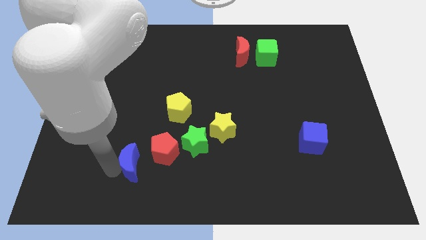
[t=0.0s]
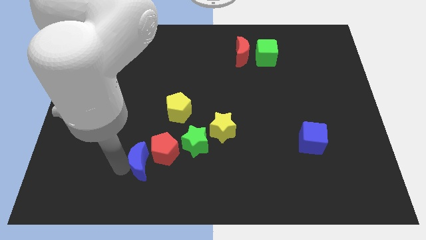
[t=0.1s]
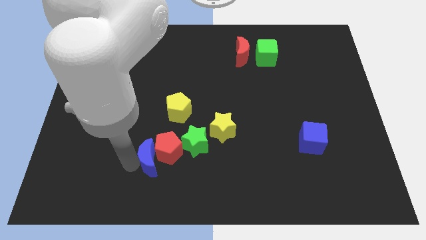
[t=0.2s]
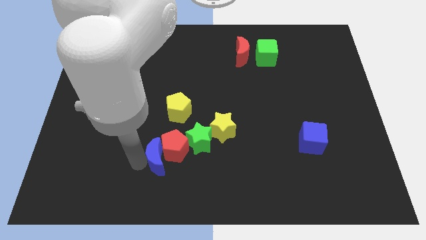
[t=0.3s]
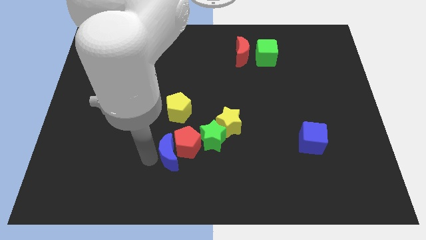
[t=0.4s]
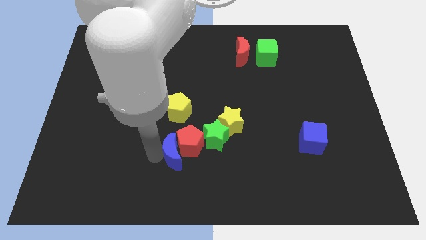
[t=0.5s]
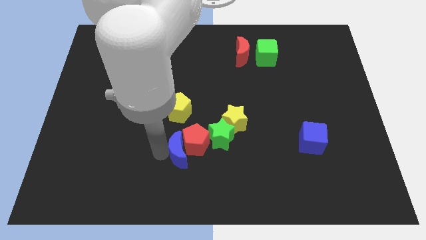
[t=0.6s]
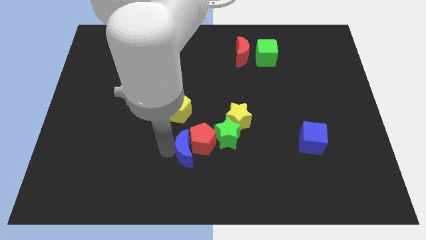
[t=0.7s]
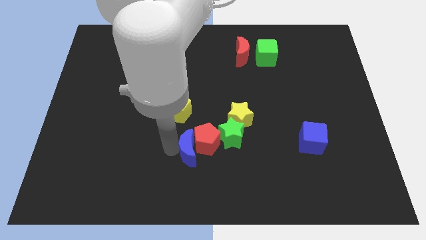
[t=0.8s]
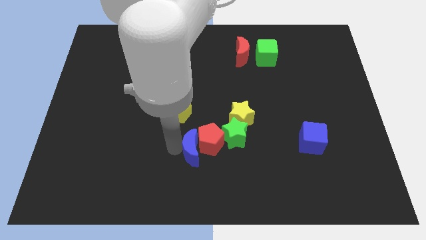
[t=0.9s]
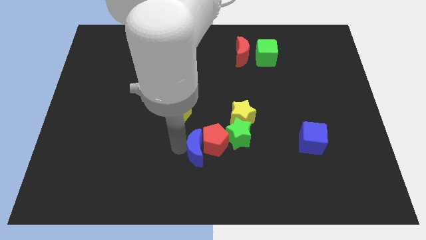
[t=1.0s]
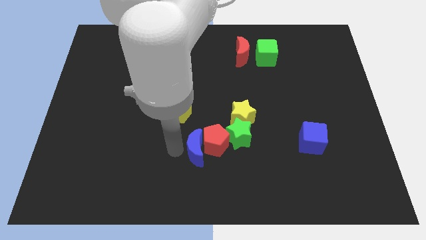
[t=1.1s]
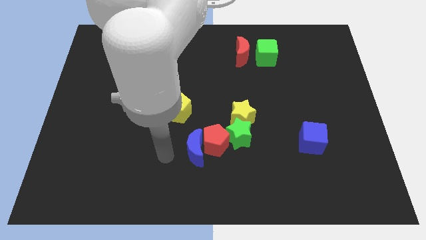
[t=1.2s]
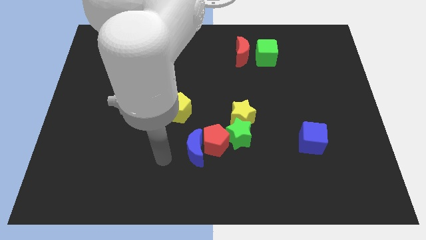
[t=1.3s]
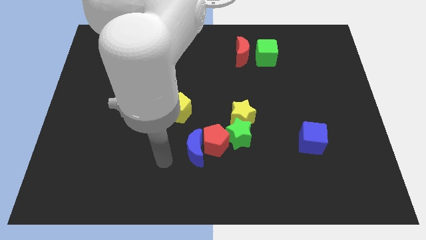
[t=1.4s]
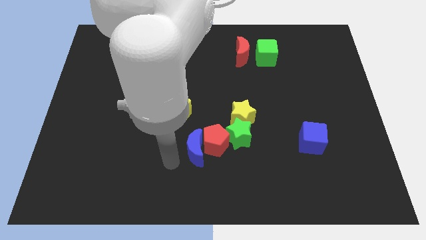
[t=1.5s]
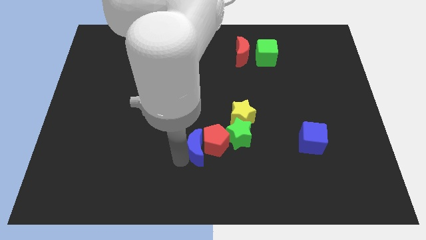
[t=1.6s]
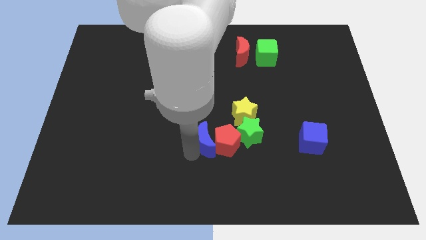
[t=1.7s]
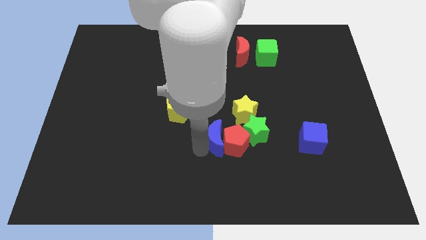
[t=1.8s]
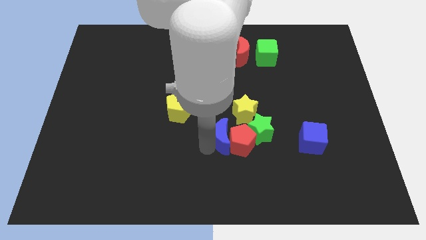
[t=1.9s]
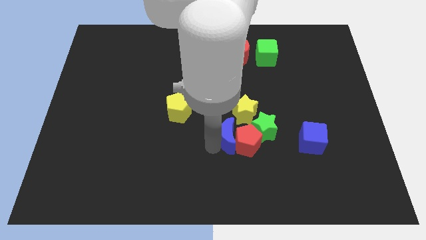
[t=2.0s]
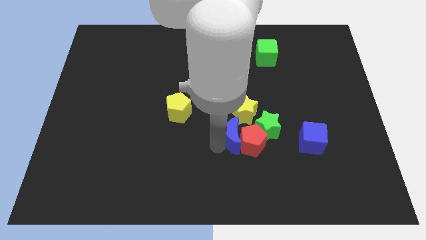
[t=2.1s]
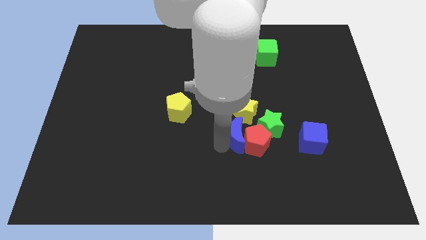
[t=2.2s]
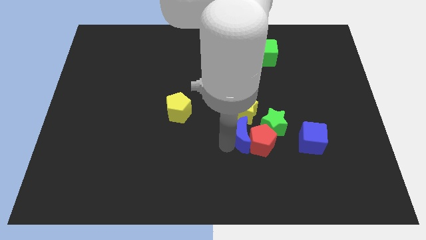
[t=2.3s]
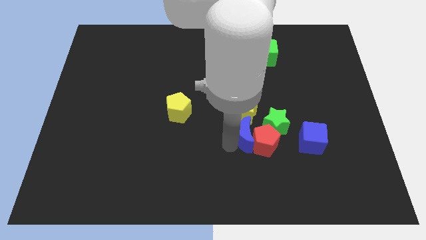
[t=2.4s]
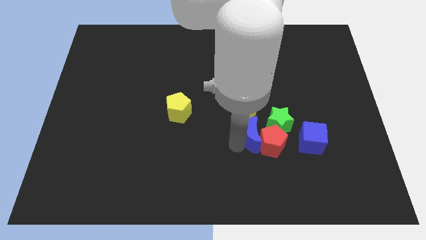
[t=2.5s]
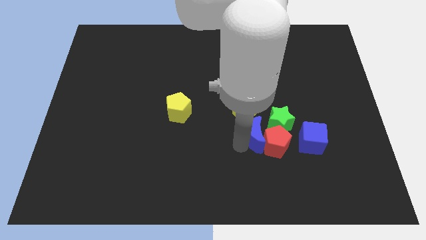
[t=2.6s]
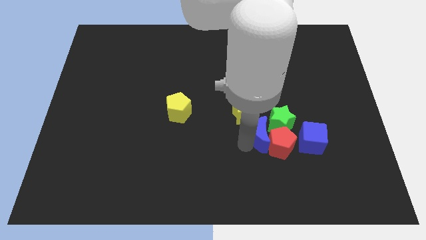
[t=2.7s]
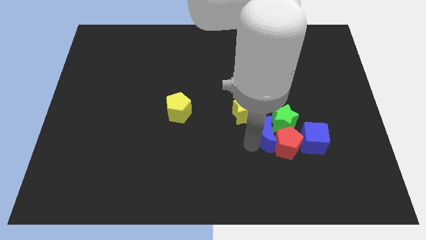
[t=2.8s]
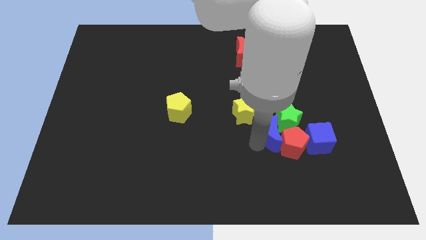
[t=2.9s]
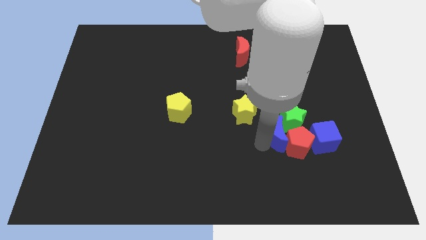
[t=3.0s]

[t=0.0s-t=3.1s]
push blue moon along with red pentagon in to blue cube

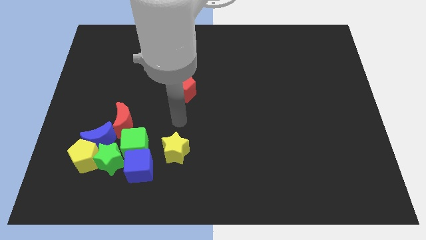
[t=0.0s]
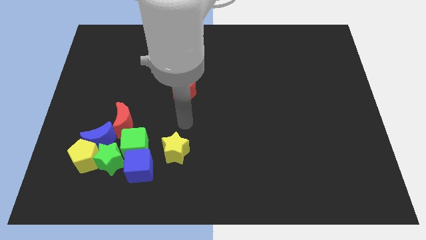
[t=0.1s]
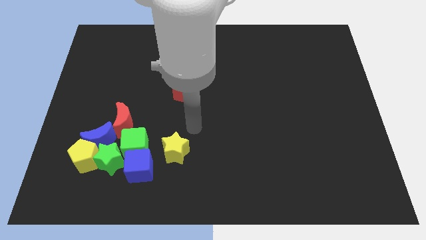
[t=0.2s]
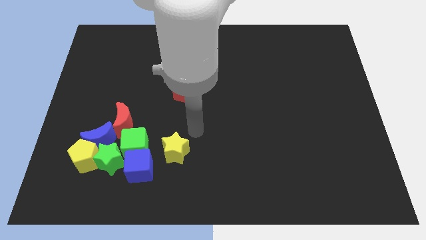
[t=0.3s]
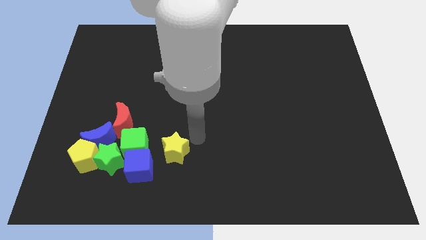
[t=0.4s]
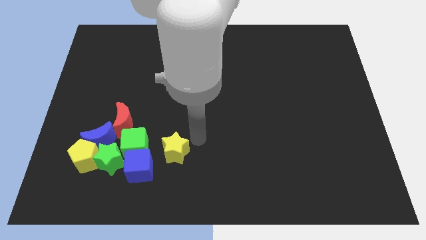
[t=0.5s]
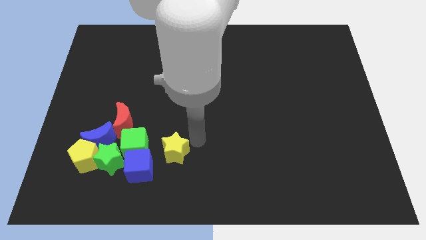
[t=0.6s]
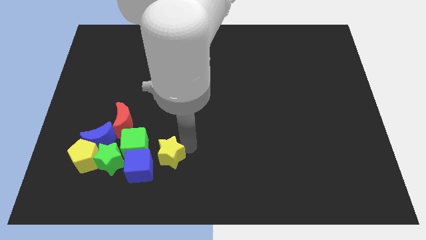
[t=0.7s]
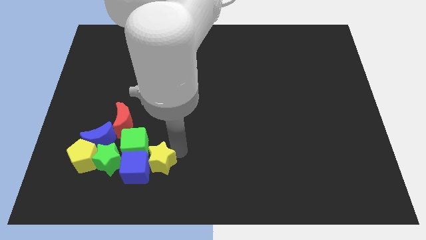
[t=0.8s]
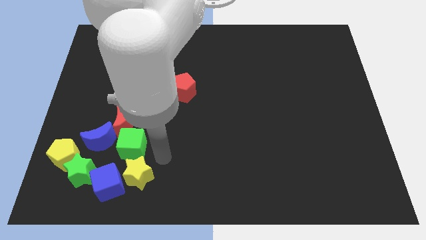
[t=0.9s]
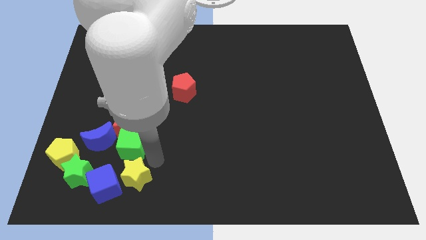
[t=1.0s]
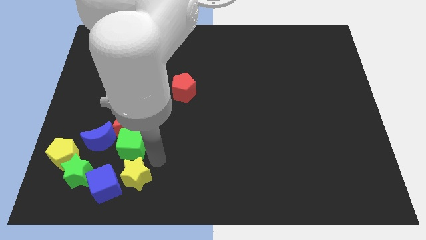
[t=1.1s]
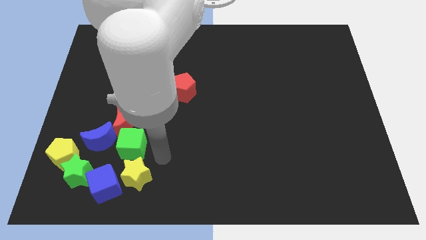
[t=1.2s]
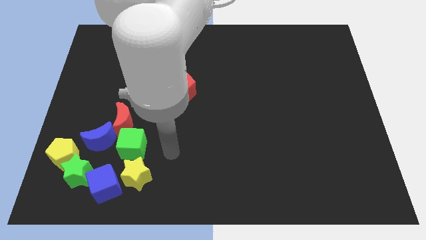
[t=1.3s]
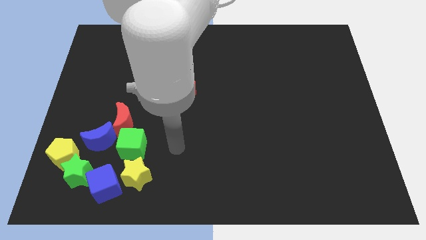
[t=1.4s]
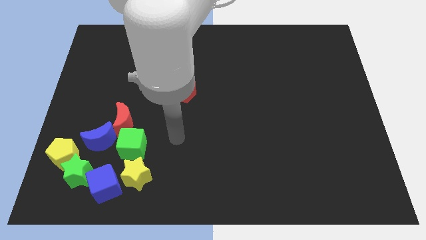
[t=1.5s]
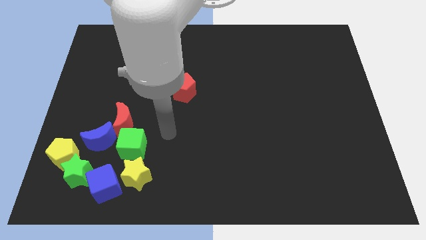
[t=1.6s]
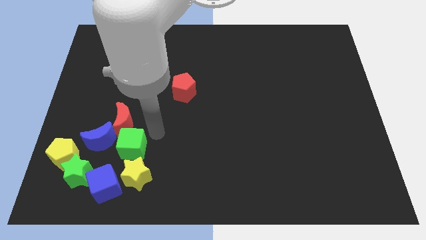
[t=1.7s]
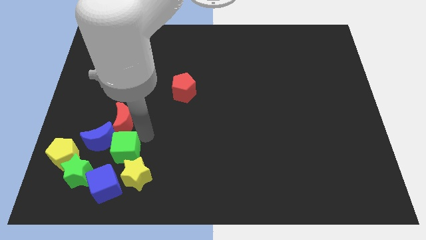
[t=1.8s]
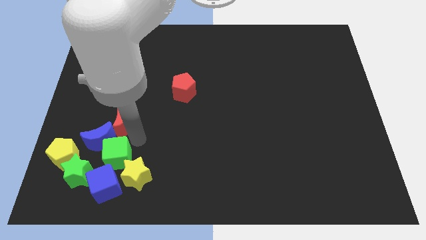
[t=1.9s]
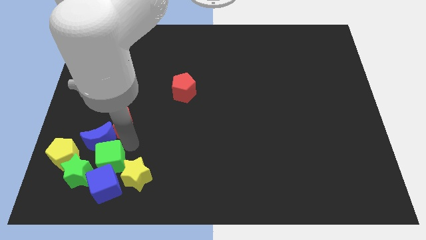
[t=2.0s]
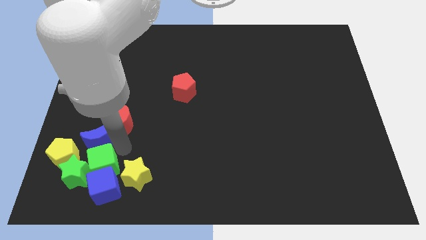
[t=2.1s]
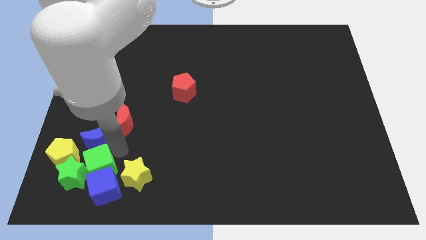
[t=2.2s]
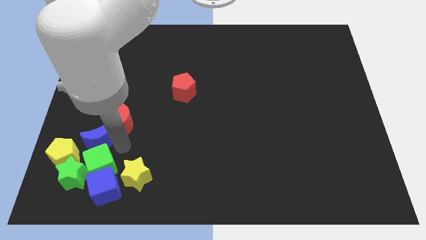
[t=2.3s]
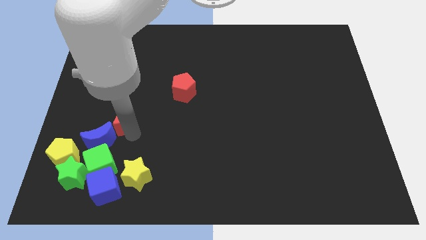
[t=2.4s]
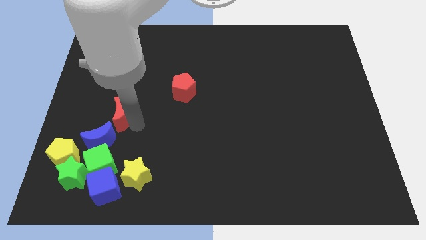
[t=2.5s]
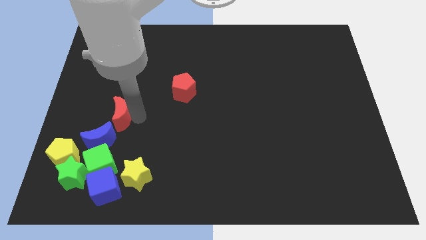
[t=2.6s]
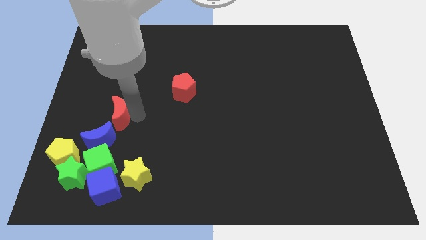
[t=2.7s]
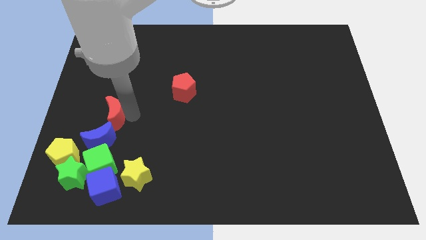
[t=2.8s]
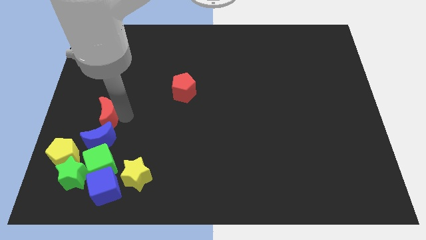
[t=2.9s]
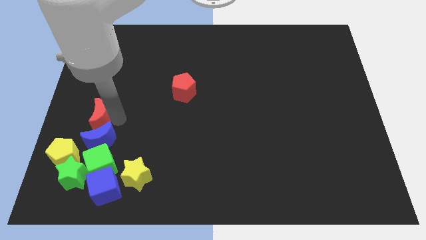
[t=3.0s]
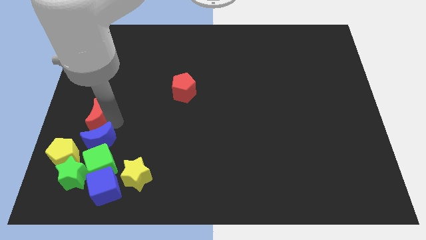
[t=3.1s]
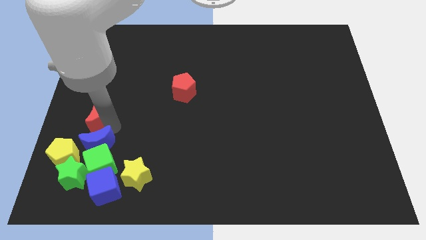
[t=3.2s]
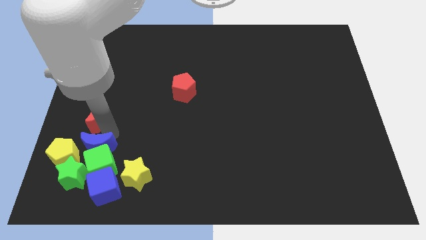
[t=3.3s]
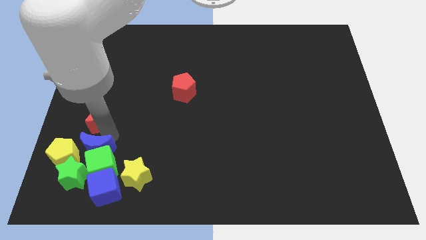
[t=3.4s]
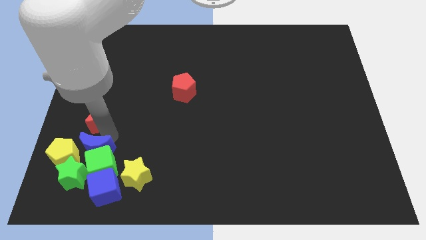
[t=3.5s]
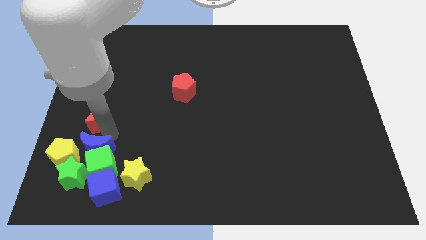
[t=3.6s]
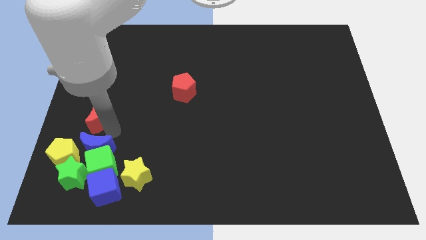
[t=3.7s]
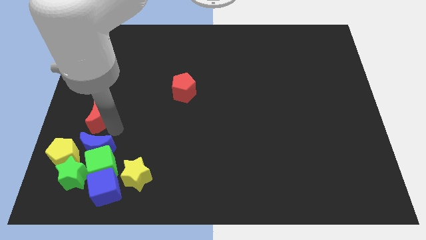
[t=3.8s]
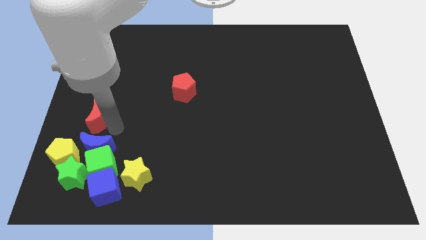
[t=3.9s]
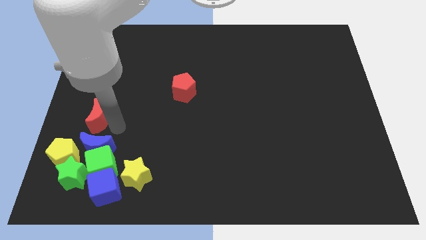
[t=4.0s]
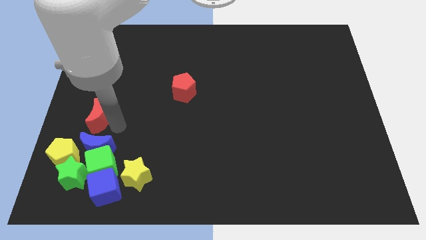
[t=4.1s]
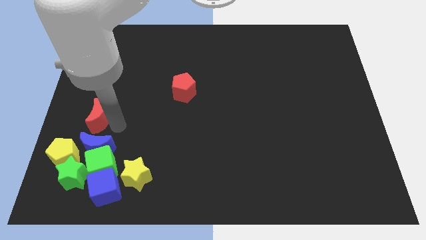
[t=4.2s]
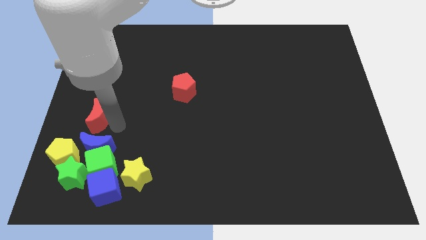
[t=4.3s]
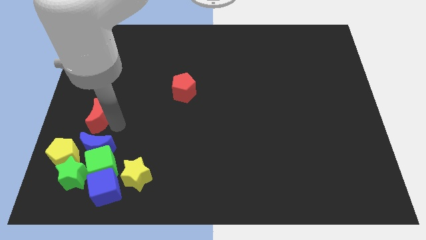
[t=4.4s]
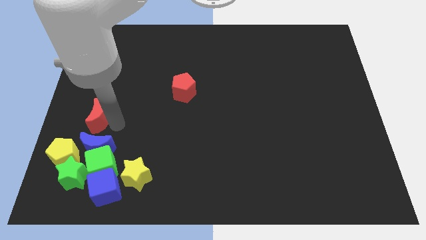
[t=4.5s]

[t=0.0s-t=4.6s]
push the group of blocks to the bottom left side of the board

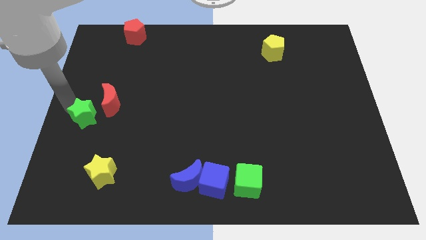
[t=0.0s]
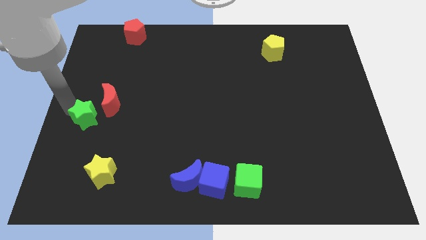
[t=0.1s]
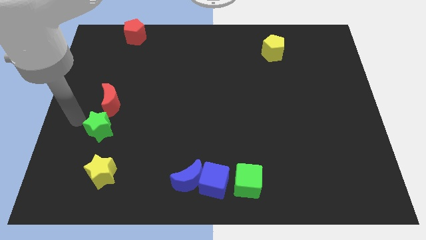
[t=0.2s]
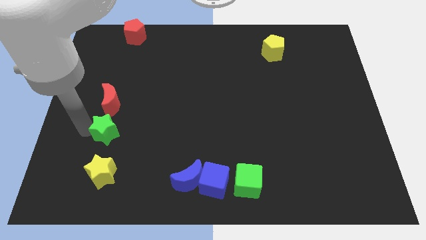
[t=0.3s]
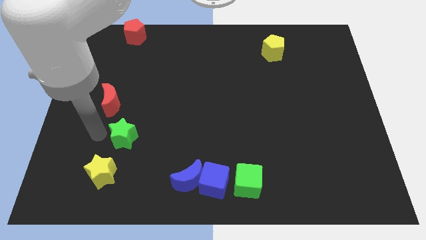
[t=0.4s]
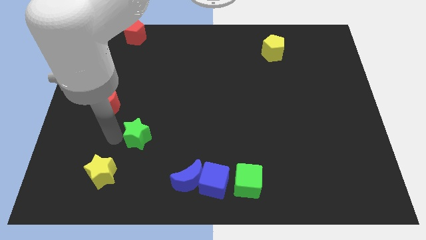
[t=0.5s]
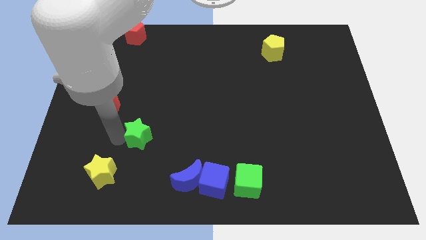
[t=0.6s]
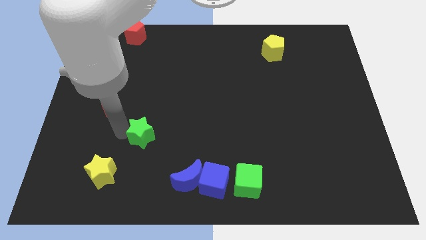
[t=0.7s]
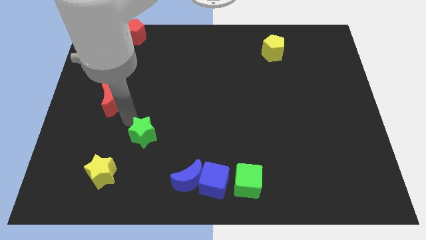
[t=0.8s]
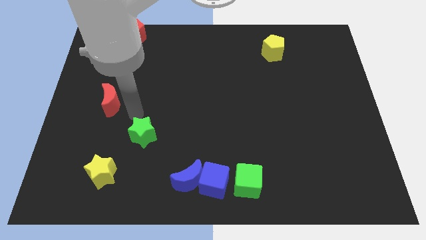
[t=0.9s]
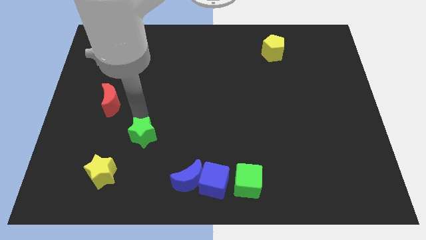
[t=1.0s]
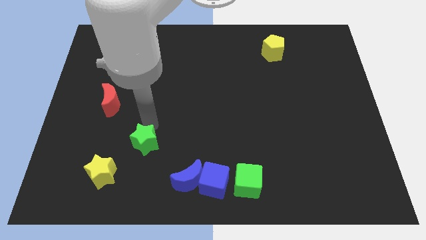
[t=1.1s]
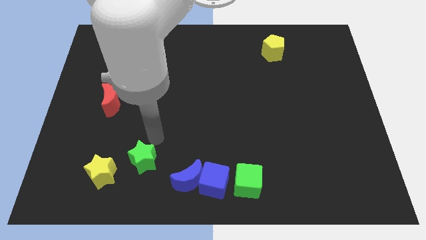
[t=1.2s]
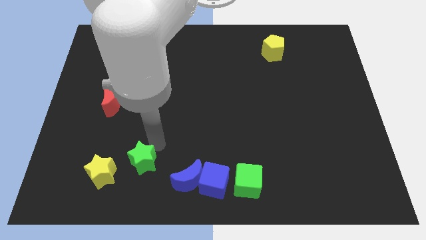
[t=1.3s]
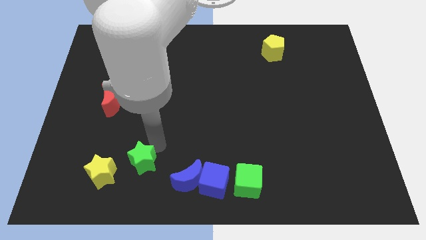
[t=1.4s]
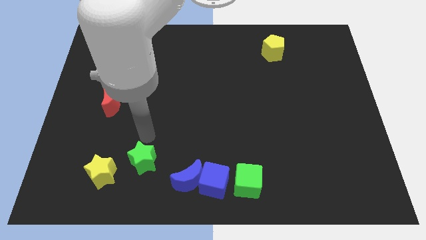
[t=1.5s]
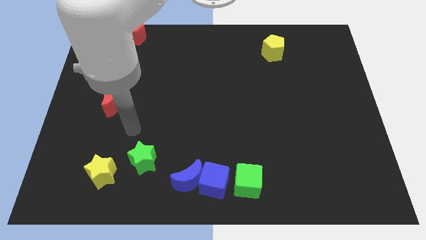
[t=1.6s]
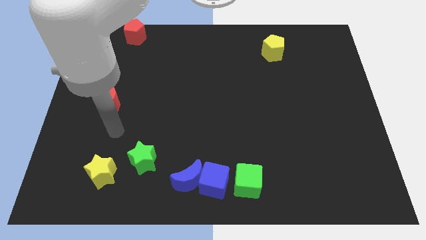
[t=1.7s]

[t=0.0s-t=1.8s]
move the green star to the top right side of the yellow star
